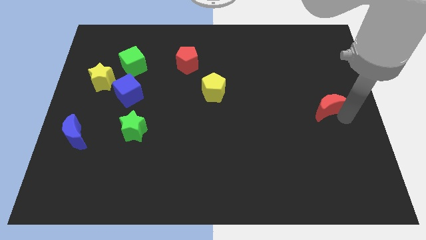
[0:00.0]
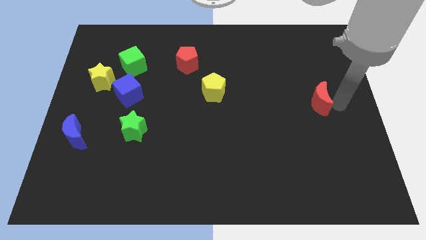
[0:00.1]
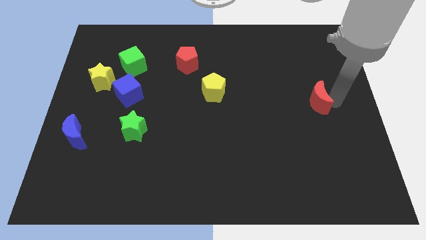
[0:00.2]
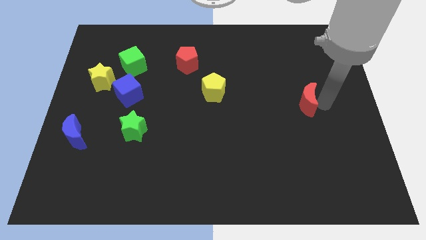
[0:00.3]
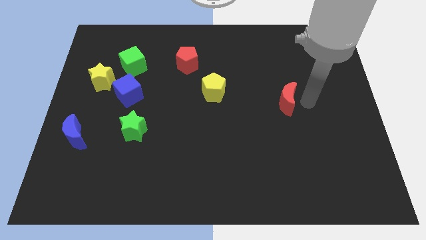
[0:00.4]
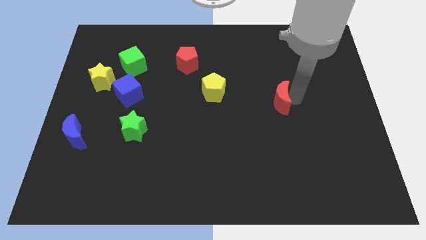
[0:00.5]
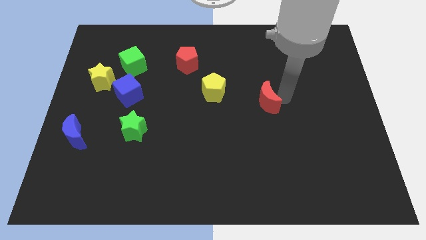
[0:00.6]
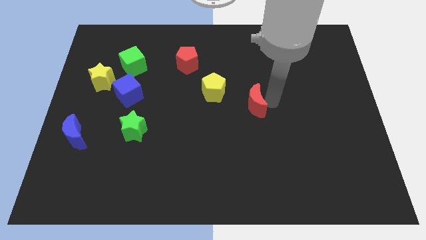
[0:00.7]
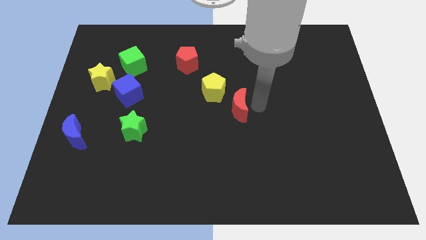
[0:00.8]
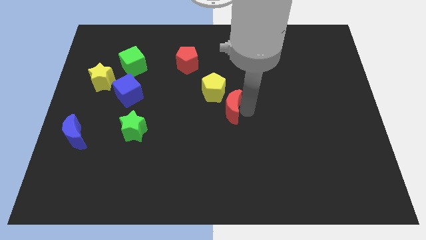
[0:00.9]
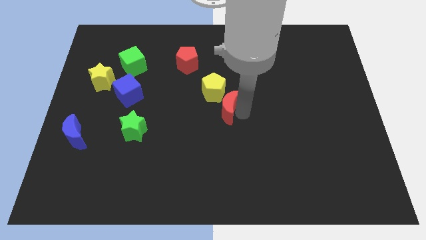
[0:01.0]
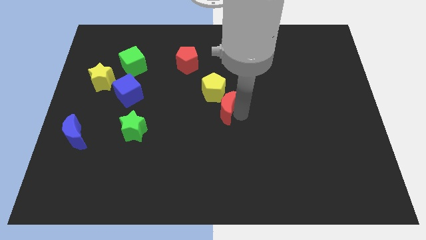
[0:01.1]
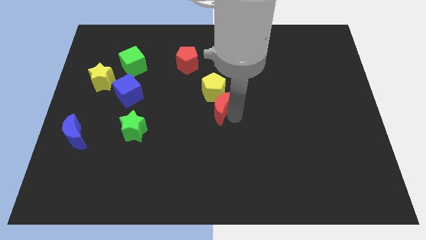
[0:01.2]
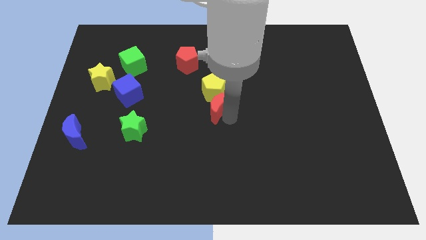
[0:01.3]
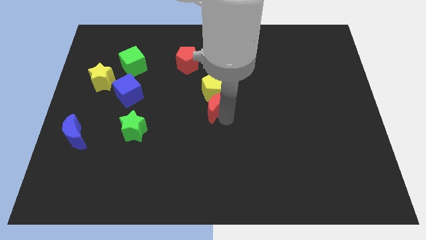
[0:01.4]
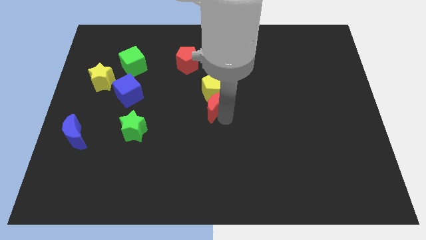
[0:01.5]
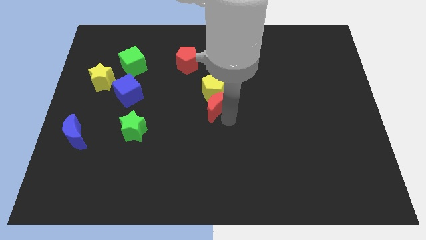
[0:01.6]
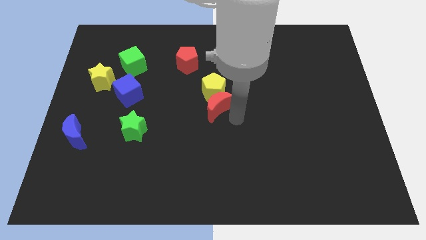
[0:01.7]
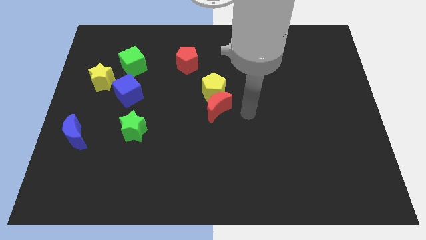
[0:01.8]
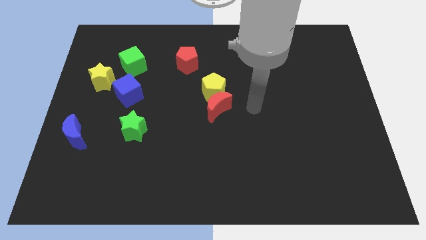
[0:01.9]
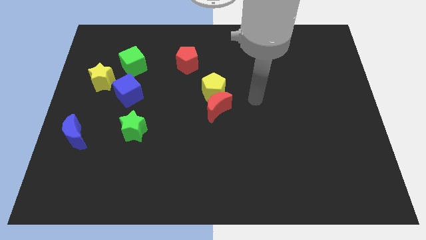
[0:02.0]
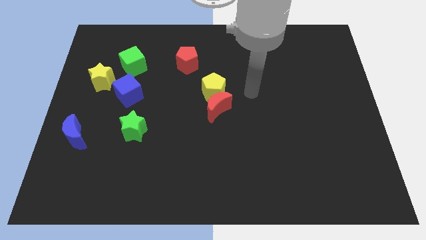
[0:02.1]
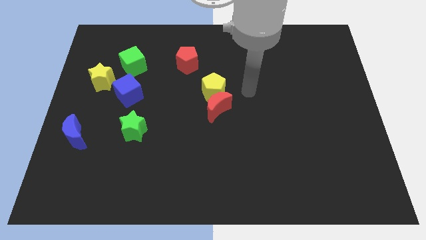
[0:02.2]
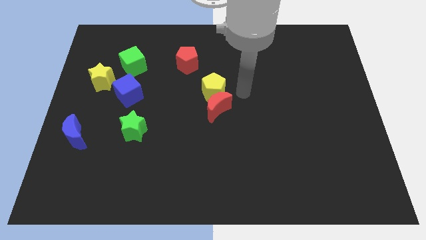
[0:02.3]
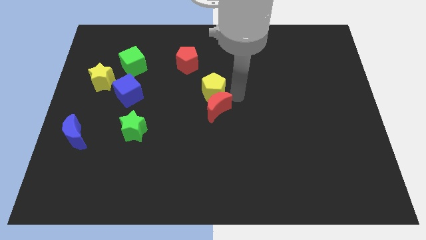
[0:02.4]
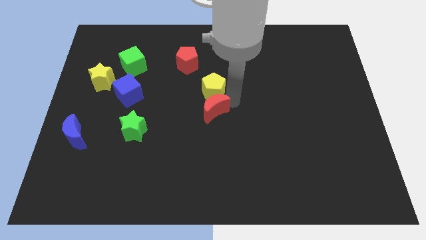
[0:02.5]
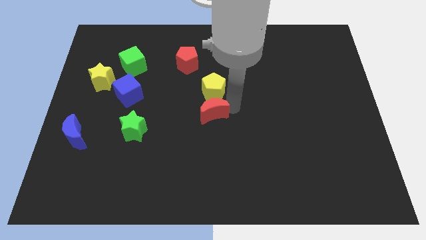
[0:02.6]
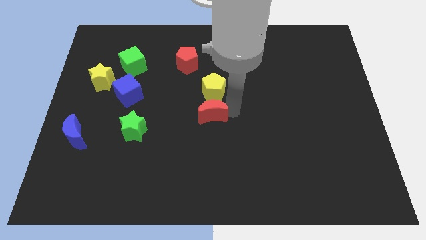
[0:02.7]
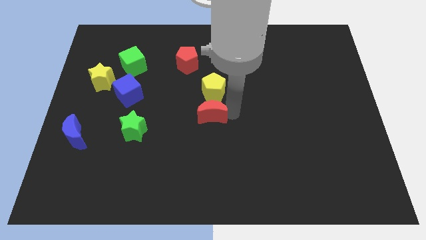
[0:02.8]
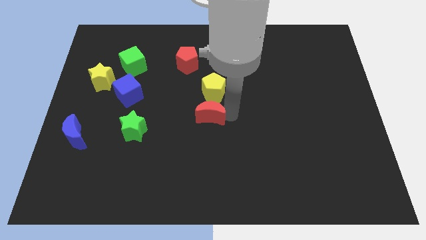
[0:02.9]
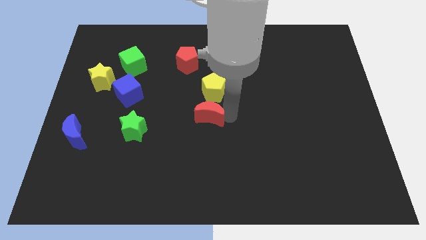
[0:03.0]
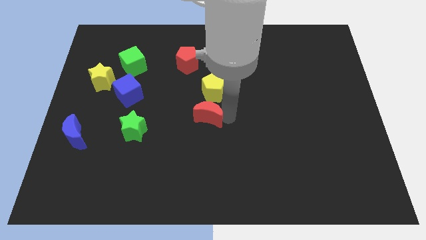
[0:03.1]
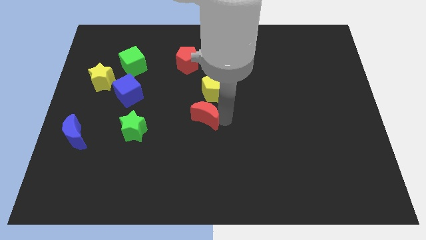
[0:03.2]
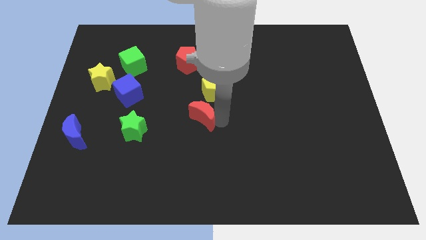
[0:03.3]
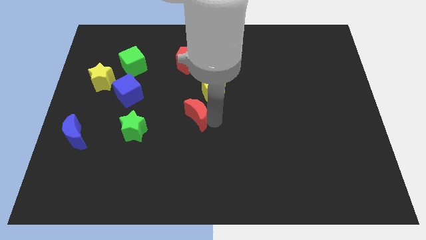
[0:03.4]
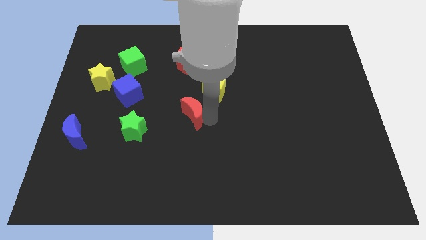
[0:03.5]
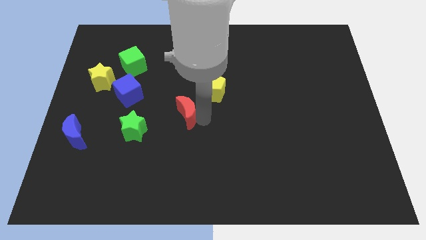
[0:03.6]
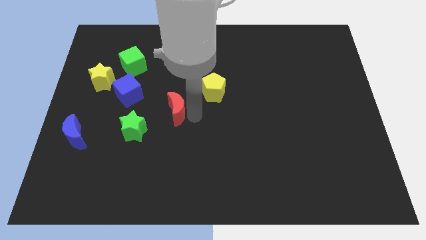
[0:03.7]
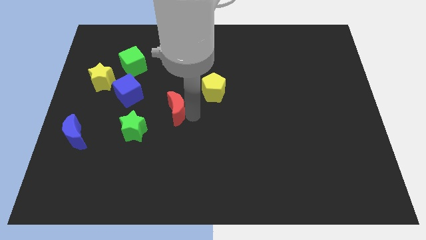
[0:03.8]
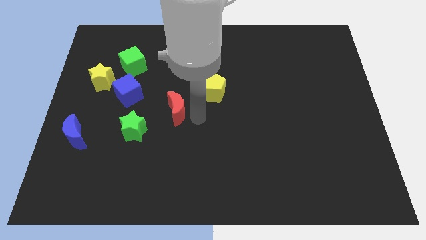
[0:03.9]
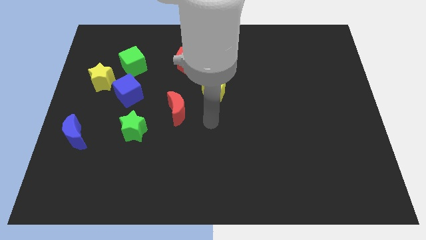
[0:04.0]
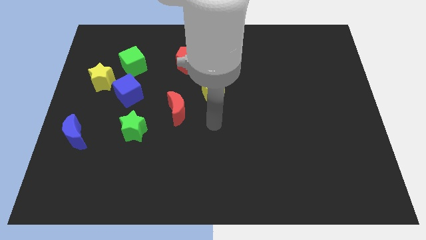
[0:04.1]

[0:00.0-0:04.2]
place the red crescent to the right of the green star

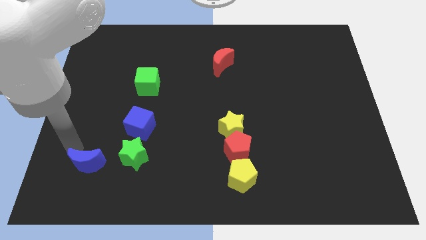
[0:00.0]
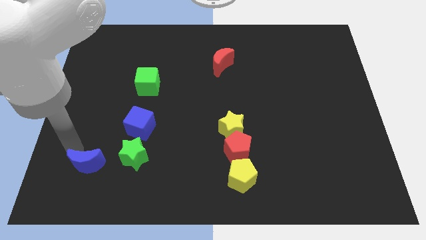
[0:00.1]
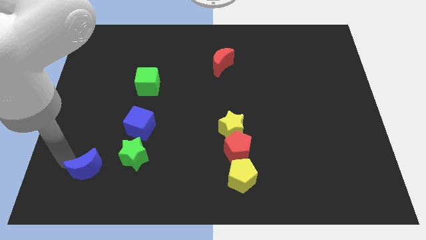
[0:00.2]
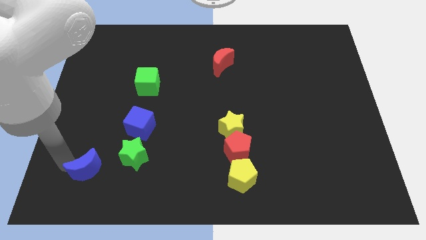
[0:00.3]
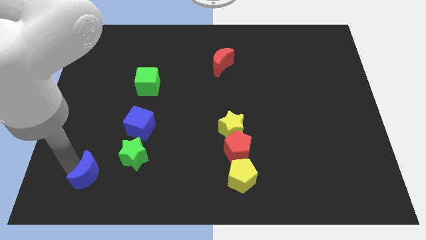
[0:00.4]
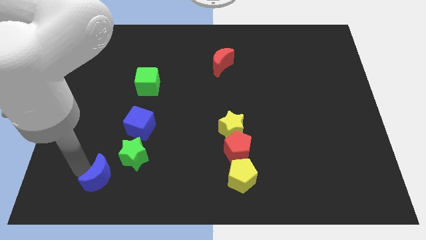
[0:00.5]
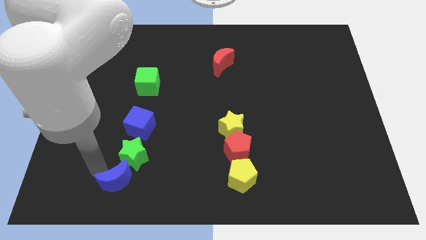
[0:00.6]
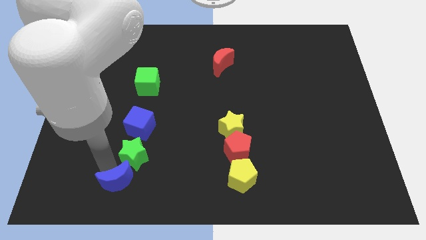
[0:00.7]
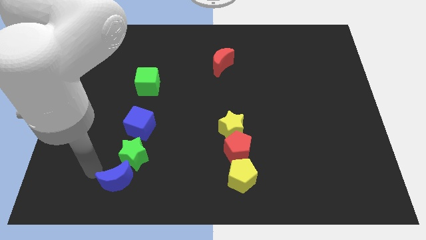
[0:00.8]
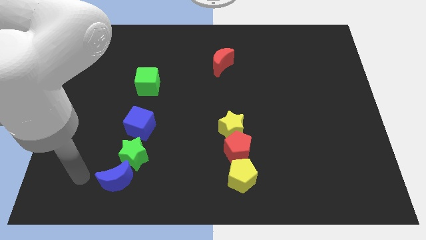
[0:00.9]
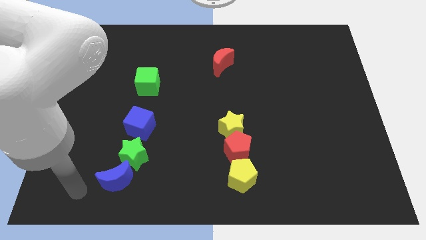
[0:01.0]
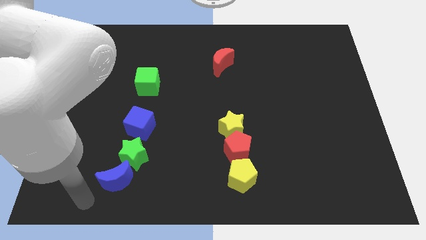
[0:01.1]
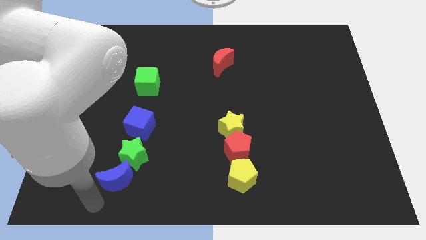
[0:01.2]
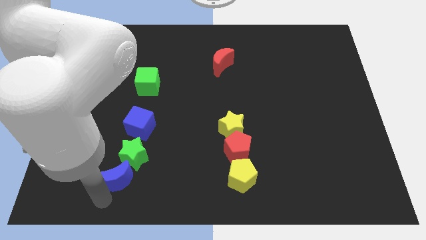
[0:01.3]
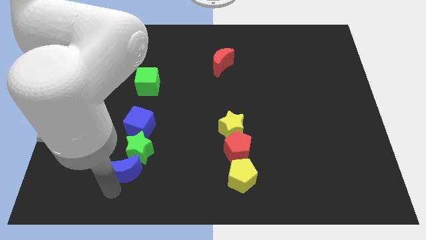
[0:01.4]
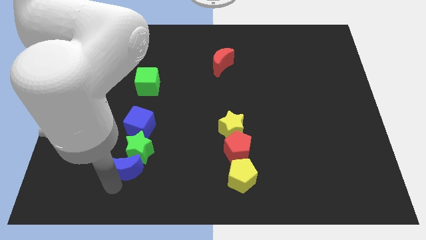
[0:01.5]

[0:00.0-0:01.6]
move the blue moon to the bottom of the green star

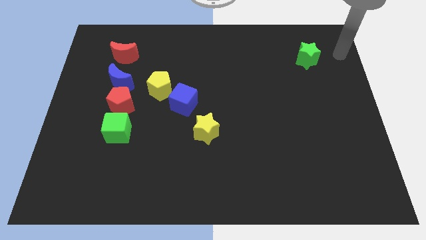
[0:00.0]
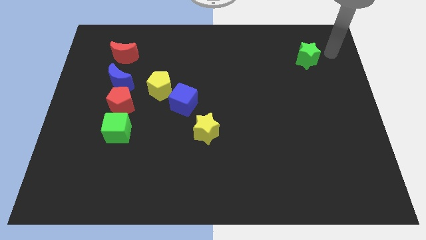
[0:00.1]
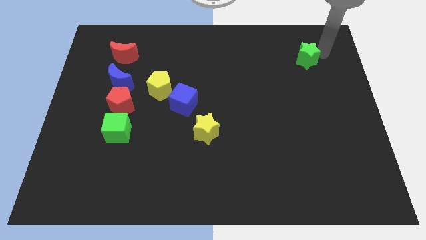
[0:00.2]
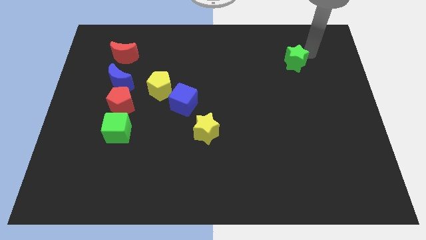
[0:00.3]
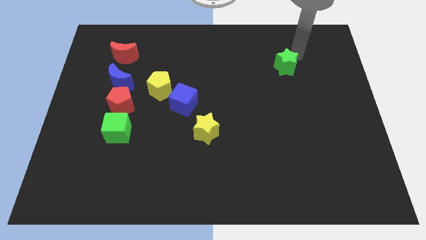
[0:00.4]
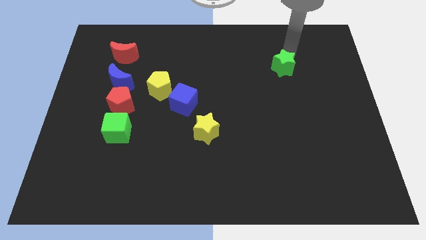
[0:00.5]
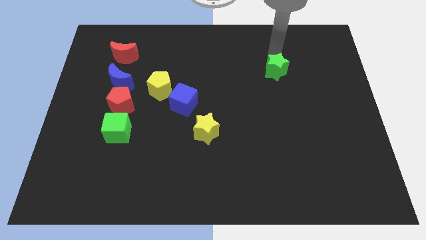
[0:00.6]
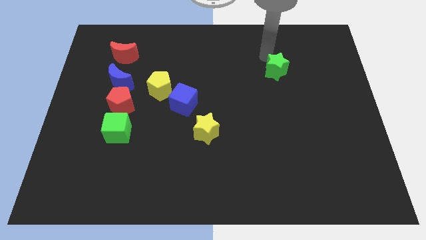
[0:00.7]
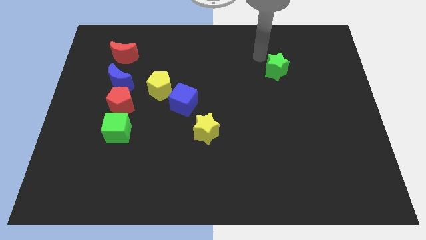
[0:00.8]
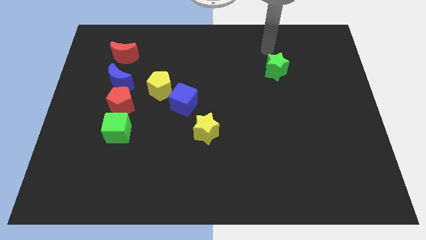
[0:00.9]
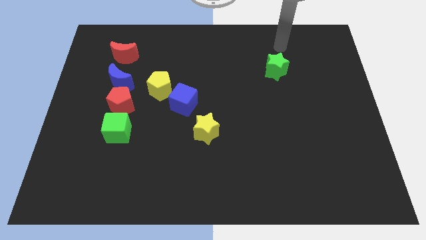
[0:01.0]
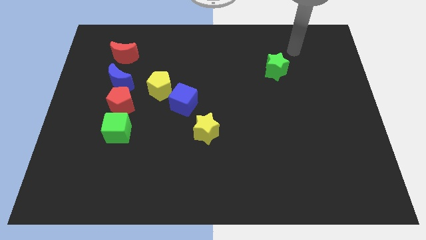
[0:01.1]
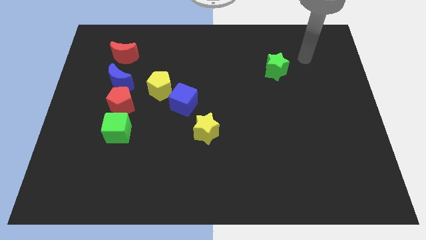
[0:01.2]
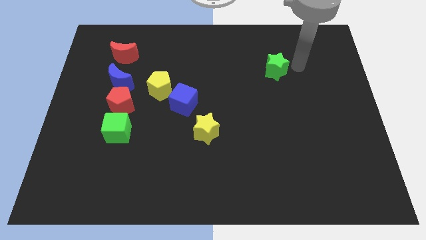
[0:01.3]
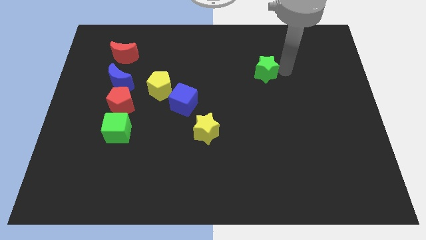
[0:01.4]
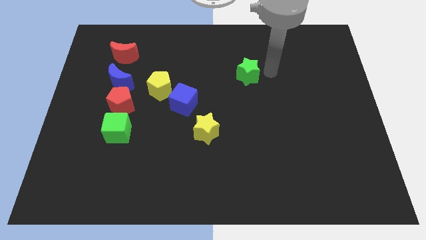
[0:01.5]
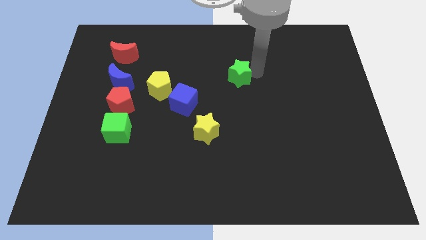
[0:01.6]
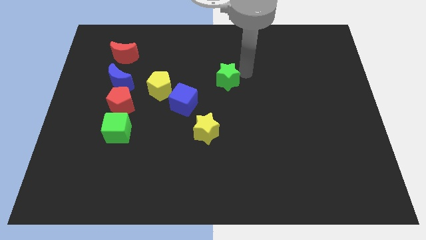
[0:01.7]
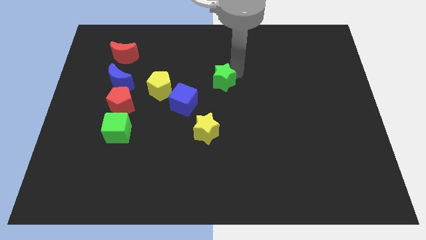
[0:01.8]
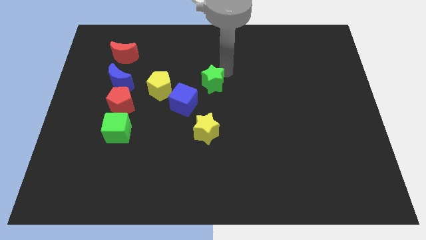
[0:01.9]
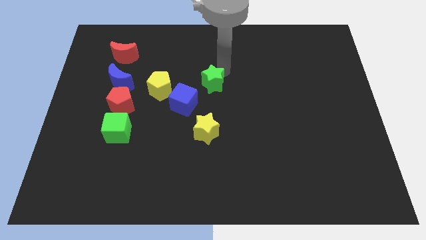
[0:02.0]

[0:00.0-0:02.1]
drag the green star close to the blue cube

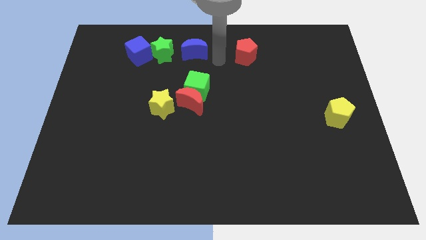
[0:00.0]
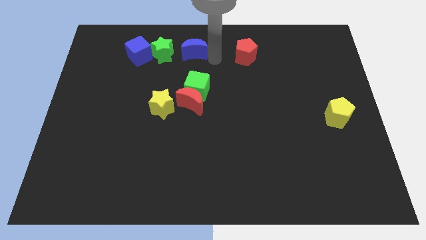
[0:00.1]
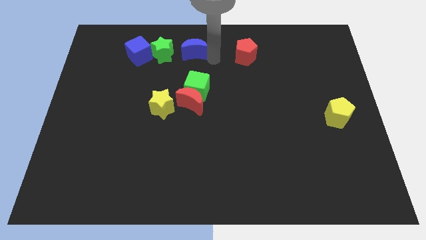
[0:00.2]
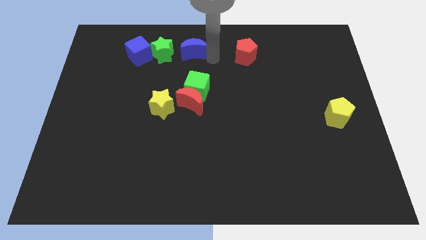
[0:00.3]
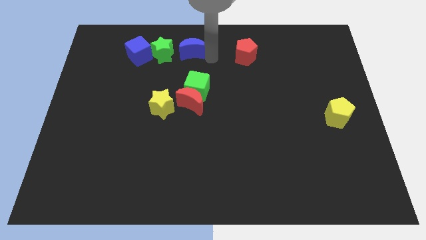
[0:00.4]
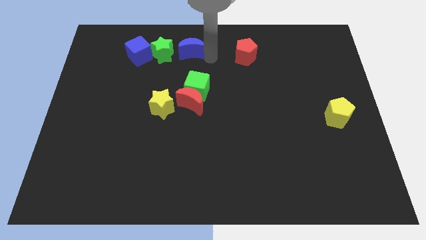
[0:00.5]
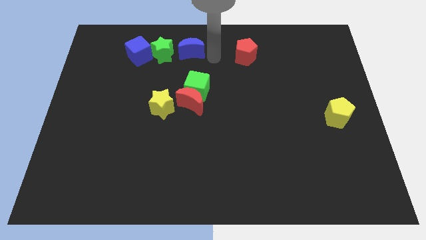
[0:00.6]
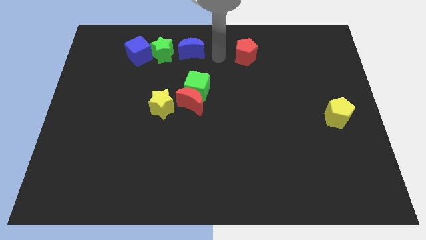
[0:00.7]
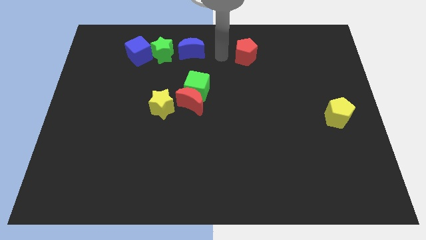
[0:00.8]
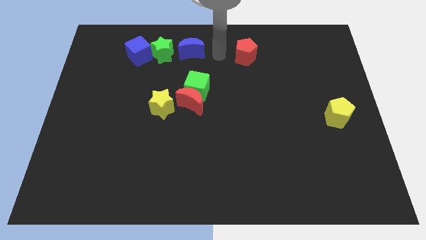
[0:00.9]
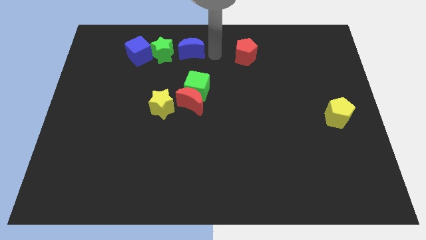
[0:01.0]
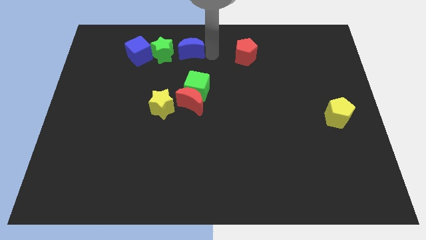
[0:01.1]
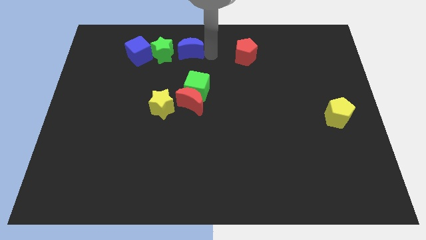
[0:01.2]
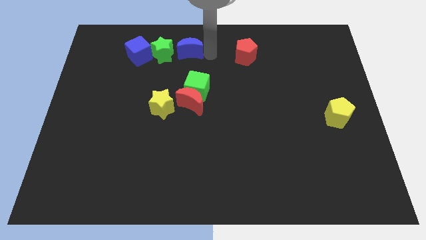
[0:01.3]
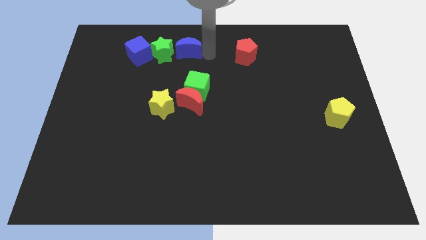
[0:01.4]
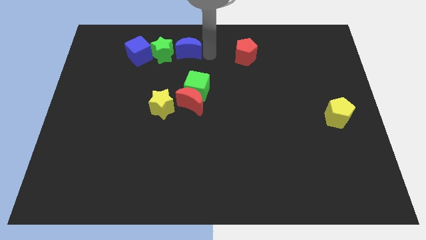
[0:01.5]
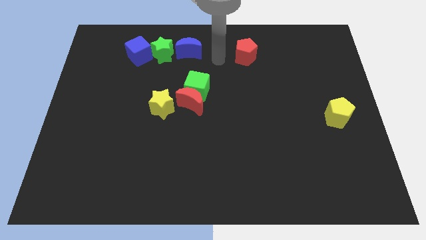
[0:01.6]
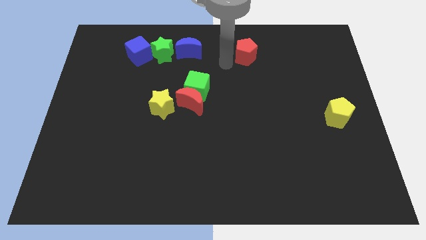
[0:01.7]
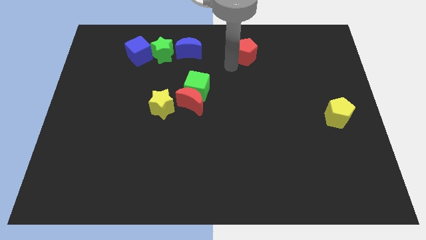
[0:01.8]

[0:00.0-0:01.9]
place blue crescent close to the green star
